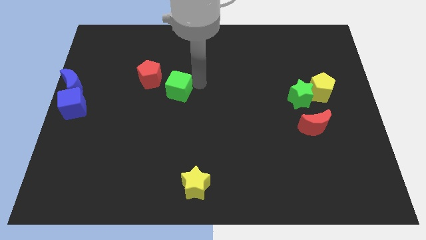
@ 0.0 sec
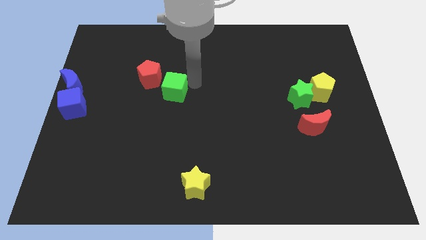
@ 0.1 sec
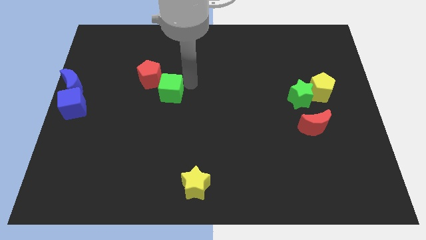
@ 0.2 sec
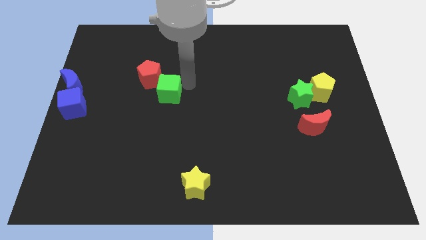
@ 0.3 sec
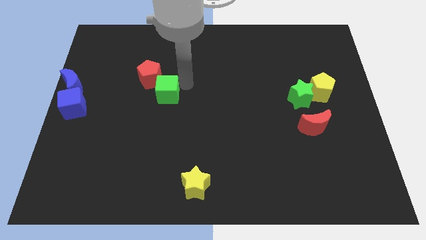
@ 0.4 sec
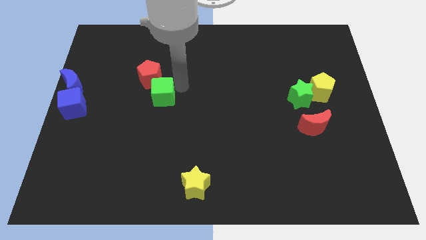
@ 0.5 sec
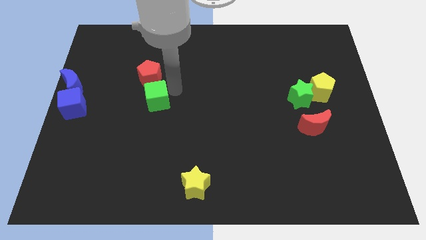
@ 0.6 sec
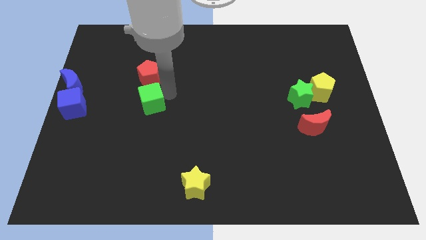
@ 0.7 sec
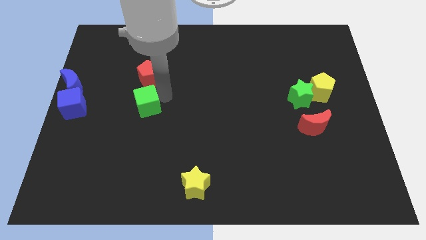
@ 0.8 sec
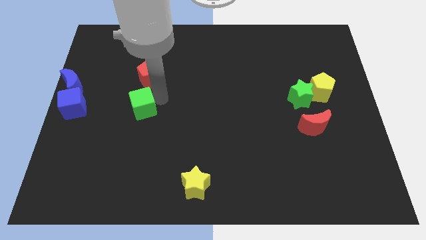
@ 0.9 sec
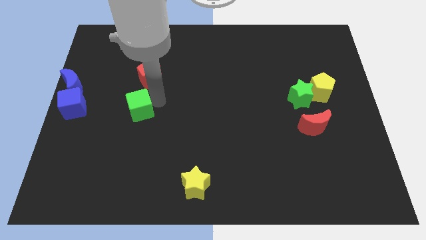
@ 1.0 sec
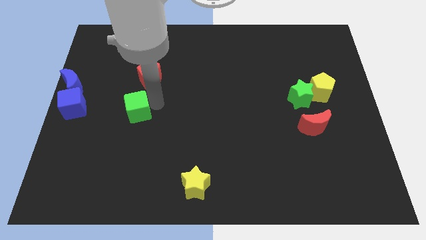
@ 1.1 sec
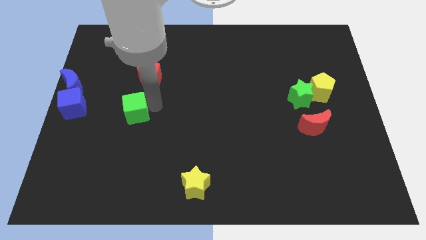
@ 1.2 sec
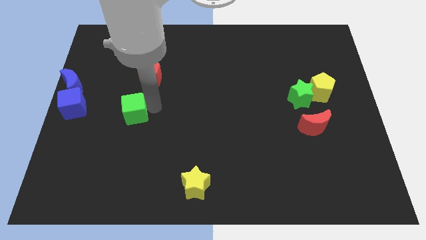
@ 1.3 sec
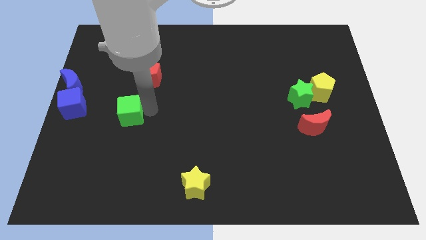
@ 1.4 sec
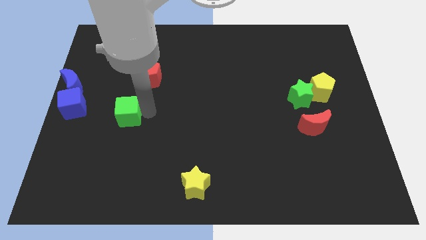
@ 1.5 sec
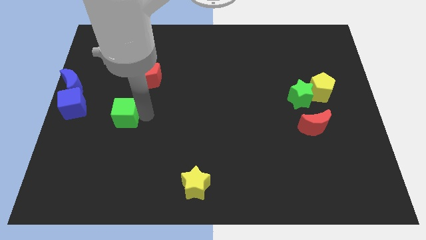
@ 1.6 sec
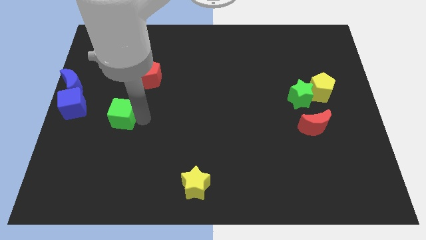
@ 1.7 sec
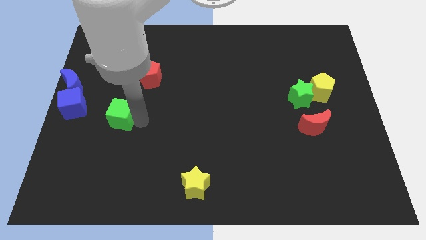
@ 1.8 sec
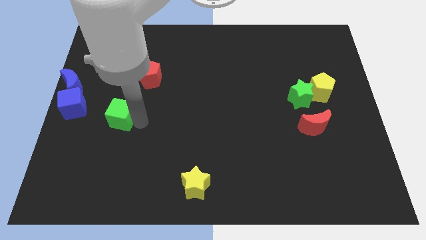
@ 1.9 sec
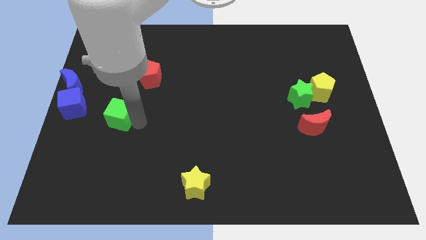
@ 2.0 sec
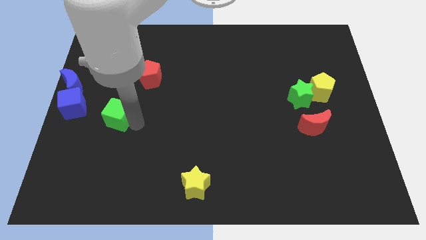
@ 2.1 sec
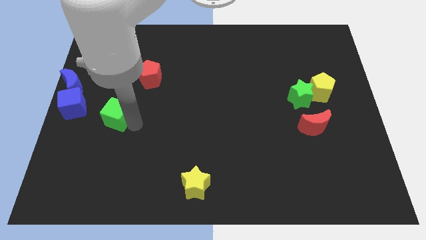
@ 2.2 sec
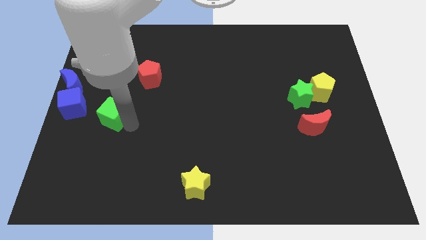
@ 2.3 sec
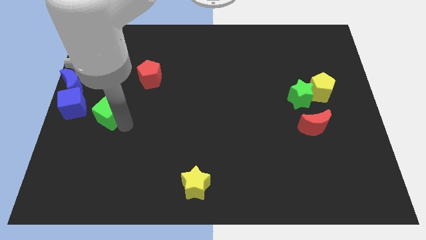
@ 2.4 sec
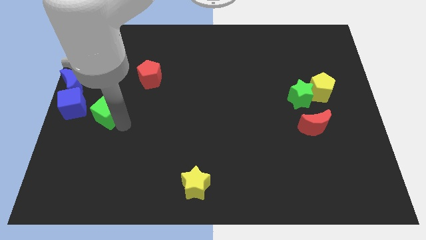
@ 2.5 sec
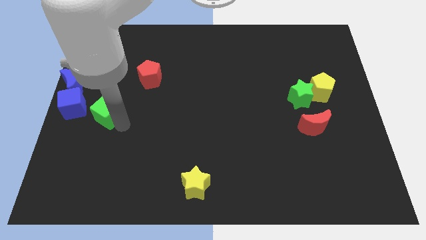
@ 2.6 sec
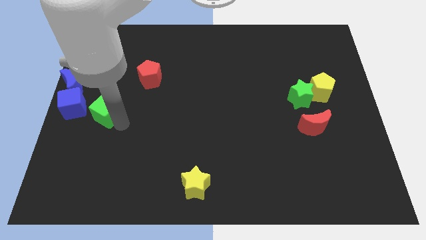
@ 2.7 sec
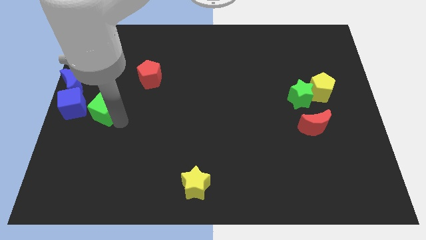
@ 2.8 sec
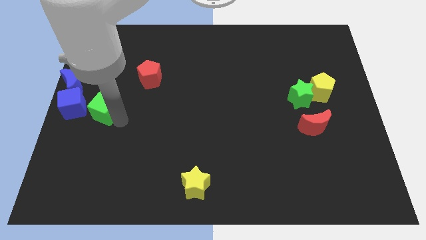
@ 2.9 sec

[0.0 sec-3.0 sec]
drag the green cube close to the blue cube

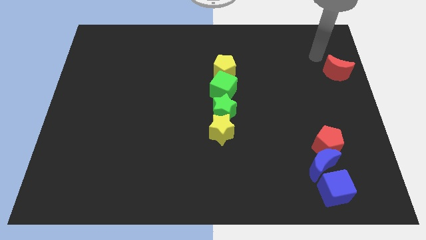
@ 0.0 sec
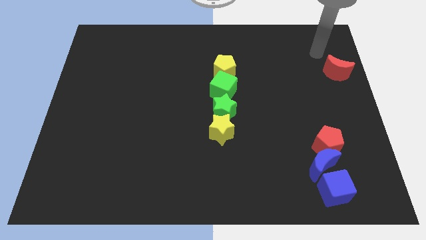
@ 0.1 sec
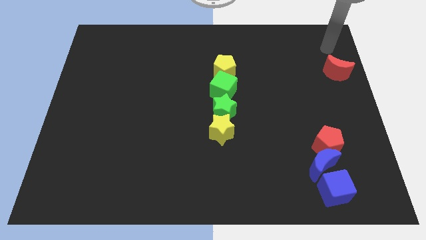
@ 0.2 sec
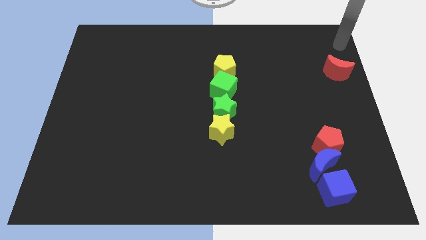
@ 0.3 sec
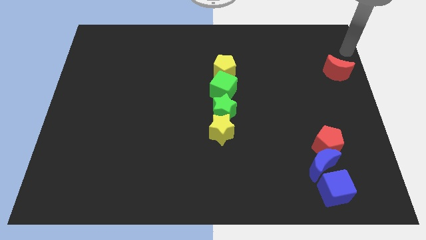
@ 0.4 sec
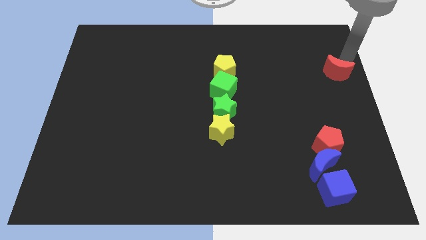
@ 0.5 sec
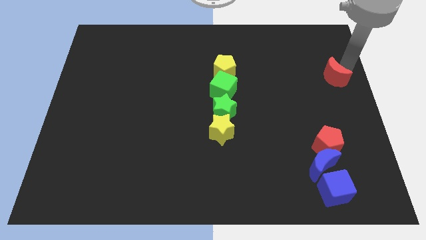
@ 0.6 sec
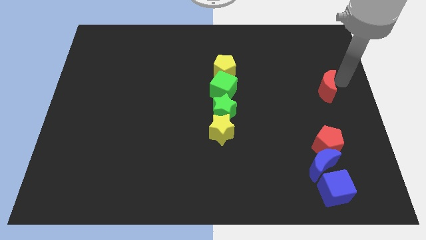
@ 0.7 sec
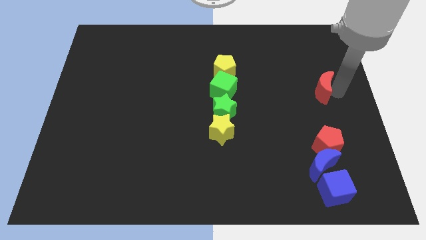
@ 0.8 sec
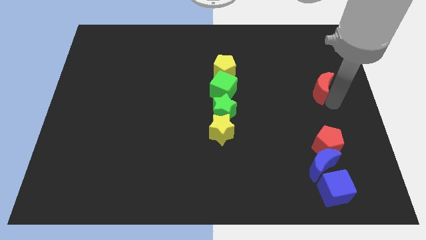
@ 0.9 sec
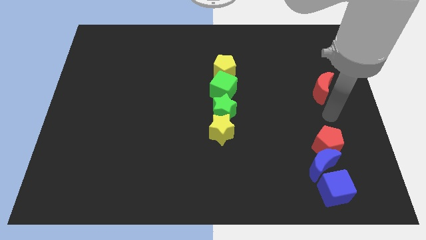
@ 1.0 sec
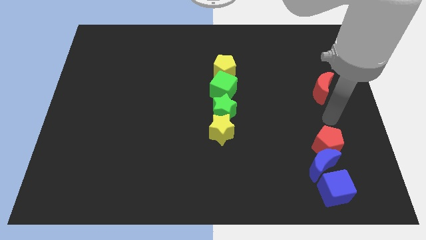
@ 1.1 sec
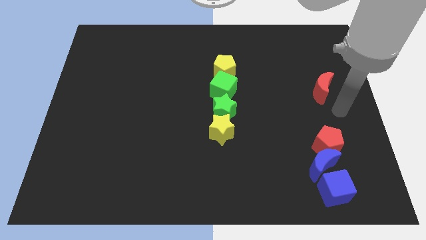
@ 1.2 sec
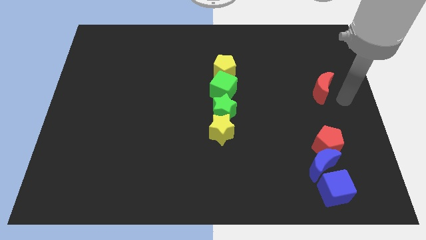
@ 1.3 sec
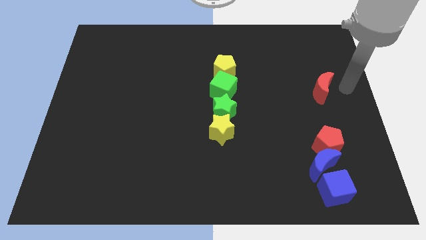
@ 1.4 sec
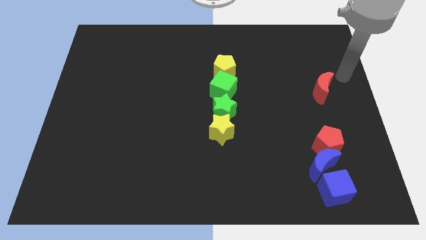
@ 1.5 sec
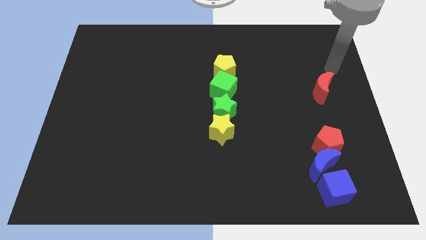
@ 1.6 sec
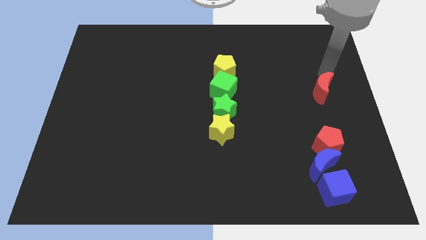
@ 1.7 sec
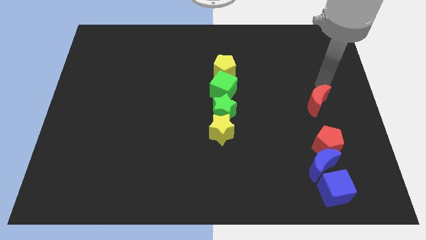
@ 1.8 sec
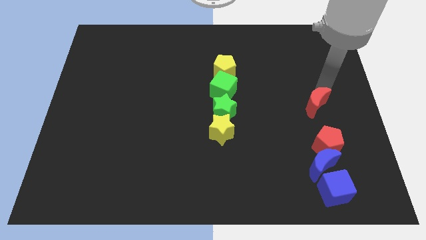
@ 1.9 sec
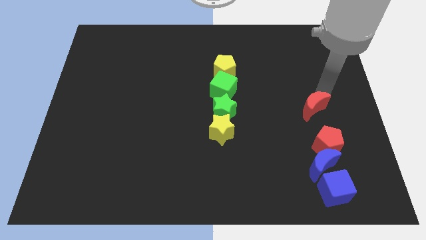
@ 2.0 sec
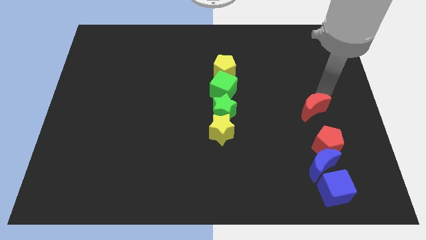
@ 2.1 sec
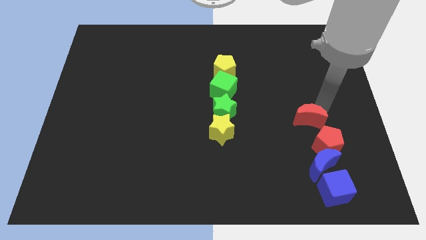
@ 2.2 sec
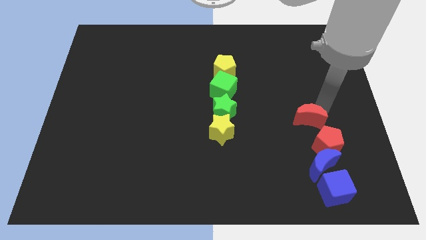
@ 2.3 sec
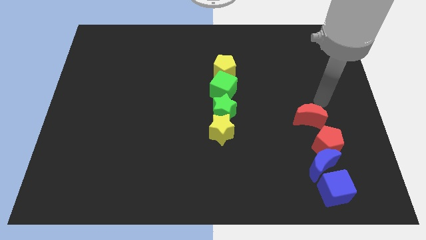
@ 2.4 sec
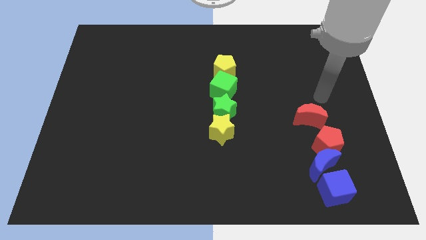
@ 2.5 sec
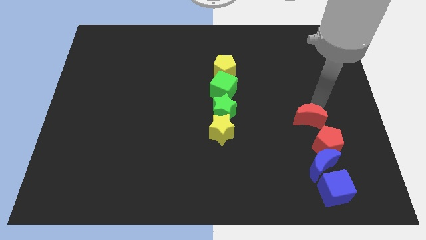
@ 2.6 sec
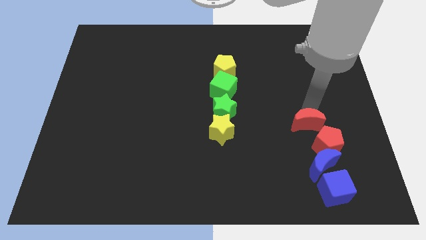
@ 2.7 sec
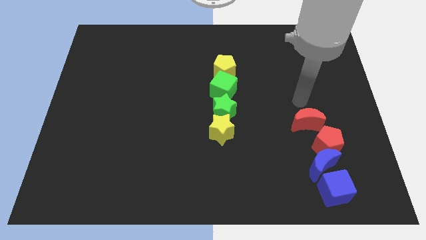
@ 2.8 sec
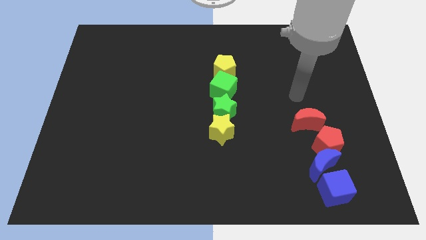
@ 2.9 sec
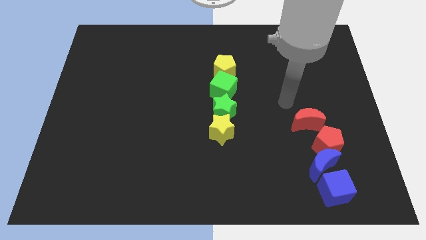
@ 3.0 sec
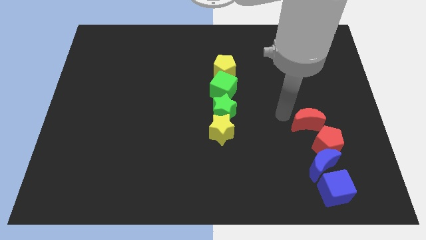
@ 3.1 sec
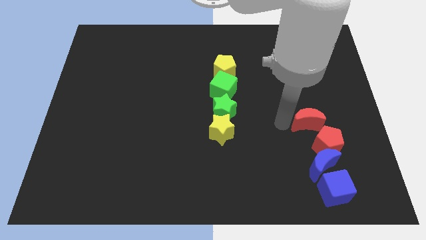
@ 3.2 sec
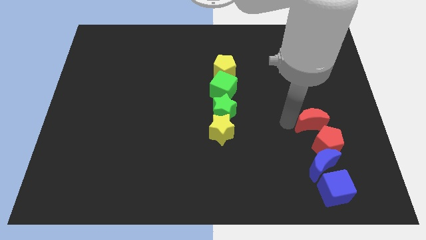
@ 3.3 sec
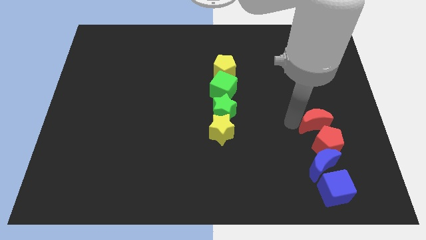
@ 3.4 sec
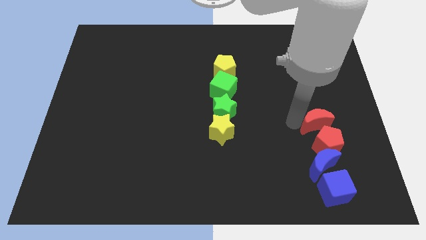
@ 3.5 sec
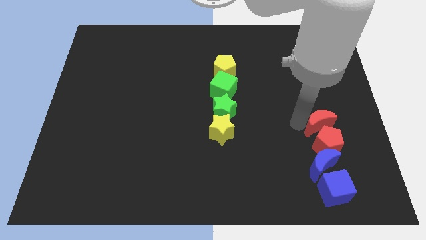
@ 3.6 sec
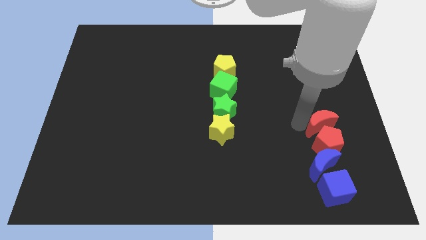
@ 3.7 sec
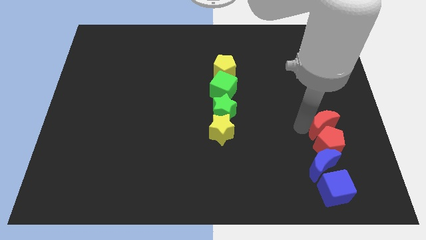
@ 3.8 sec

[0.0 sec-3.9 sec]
push the red moon into the red pentagon

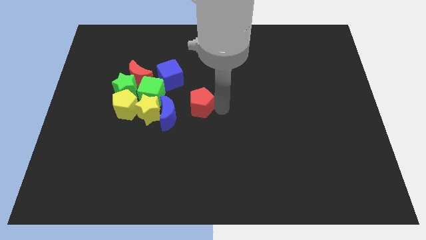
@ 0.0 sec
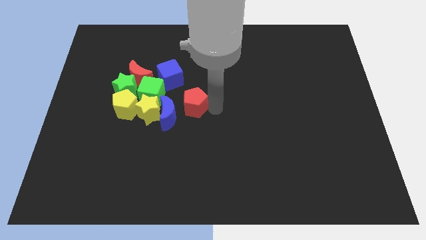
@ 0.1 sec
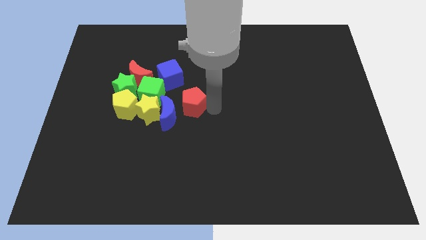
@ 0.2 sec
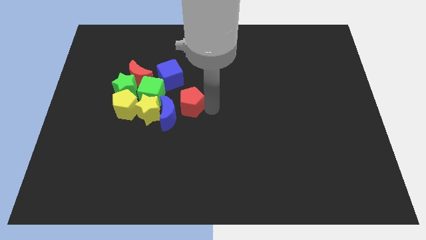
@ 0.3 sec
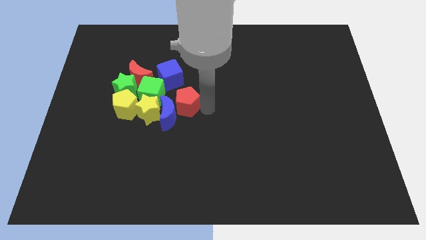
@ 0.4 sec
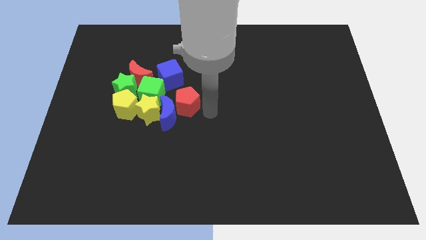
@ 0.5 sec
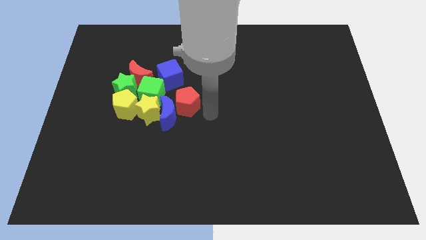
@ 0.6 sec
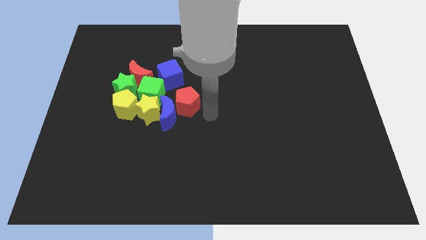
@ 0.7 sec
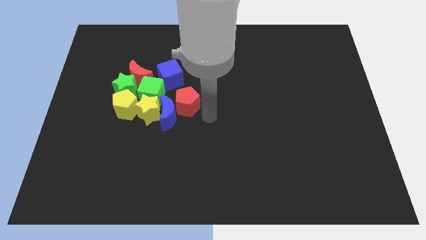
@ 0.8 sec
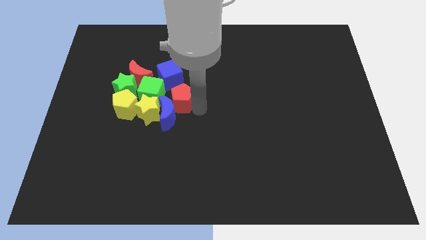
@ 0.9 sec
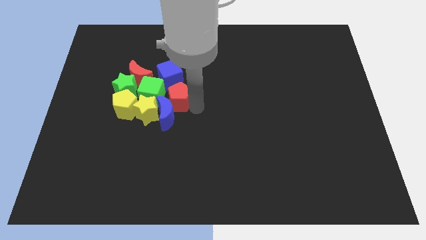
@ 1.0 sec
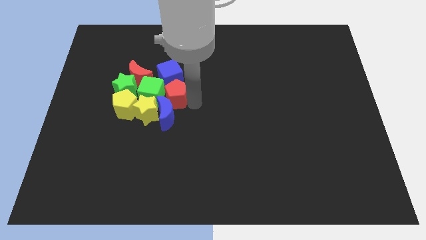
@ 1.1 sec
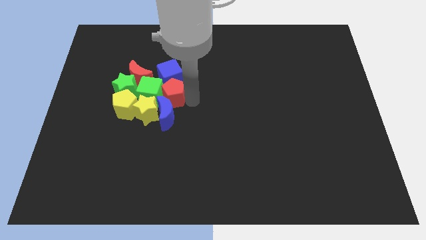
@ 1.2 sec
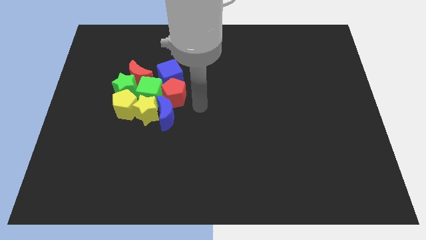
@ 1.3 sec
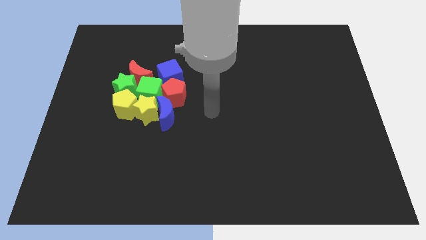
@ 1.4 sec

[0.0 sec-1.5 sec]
place red pentagon into the green cube

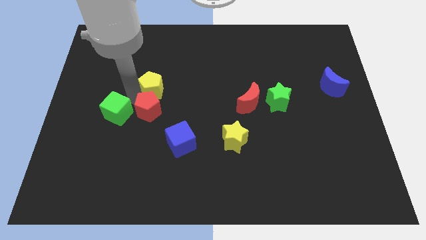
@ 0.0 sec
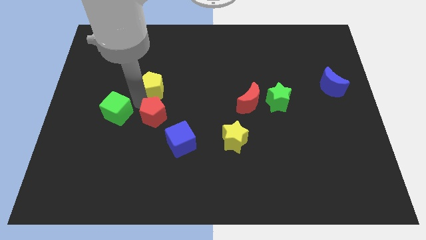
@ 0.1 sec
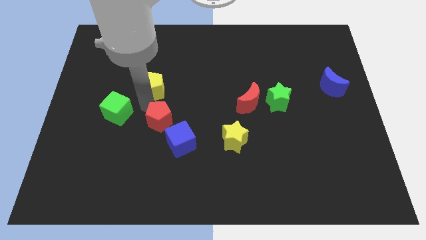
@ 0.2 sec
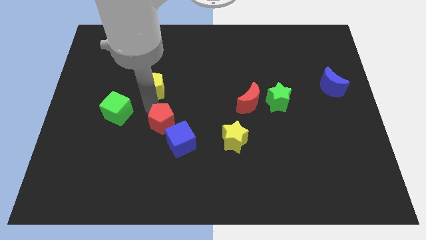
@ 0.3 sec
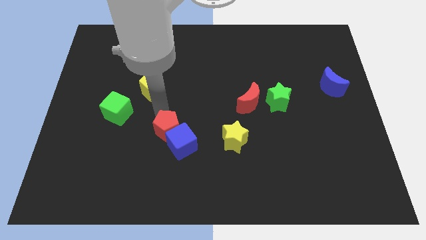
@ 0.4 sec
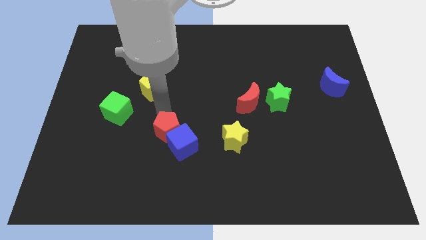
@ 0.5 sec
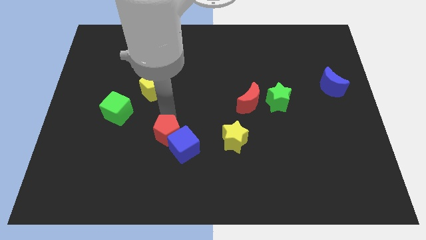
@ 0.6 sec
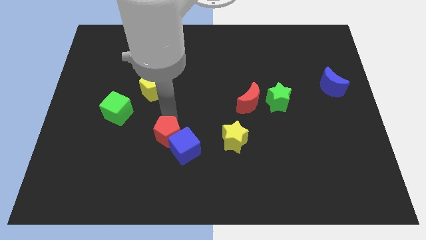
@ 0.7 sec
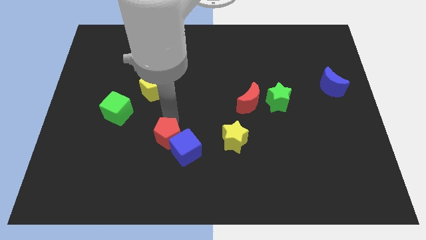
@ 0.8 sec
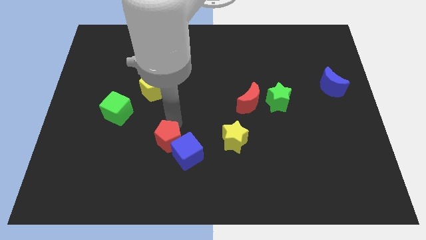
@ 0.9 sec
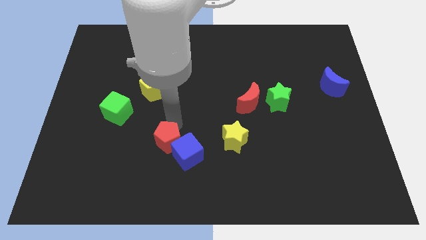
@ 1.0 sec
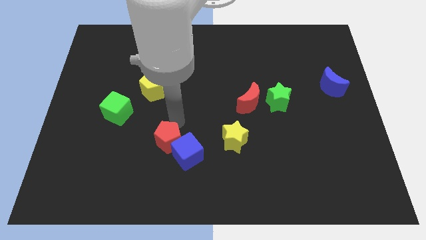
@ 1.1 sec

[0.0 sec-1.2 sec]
push the red pentagon into the blue cube
